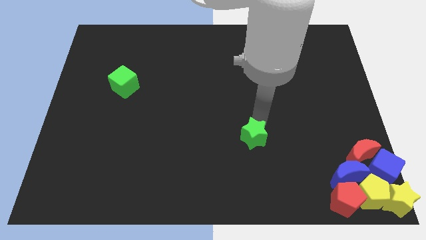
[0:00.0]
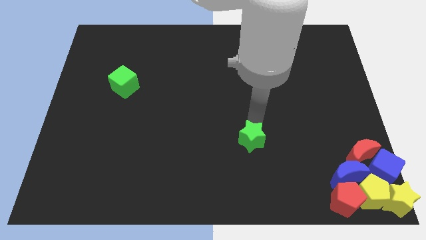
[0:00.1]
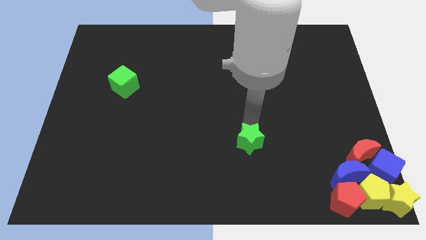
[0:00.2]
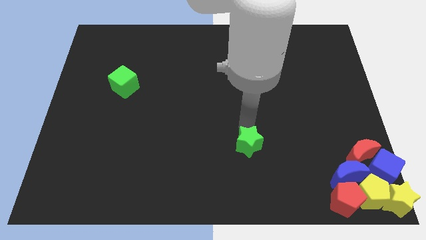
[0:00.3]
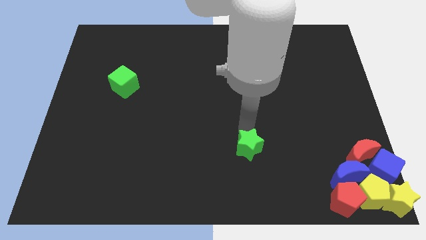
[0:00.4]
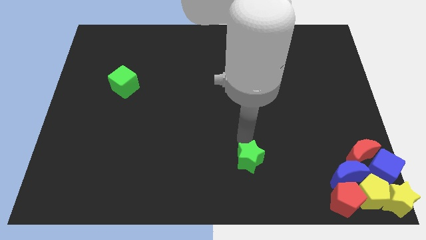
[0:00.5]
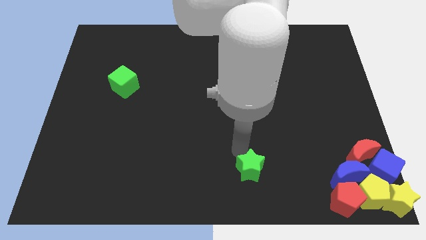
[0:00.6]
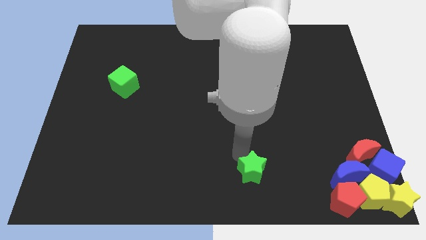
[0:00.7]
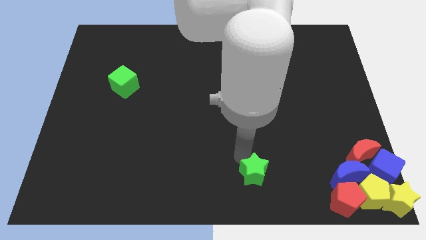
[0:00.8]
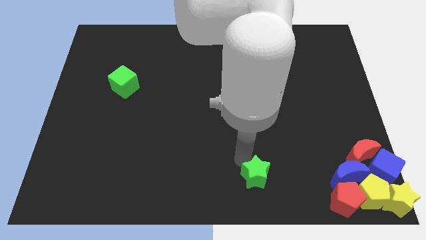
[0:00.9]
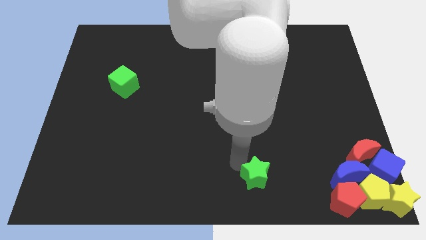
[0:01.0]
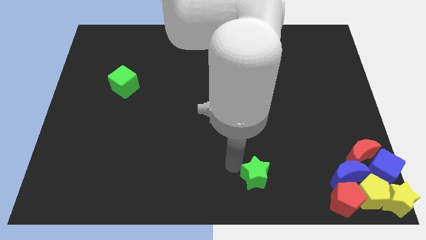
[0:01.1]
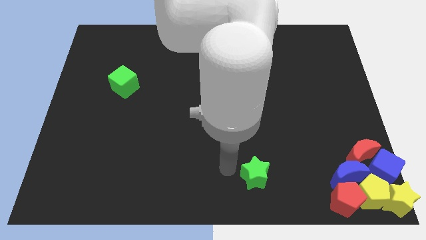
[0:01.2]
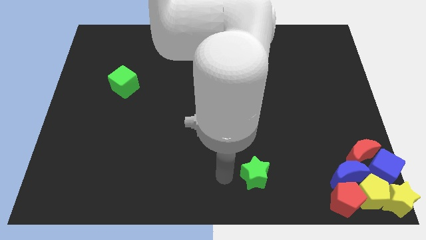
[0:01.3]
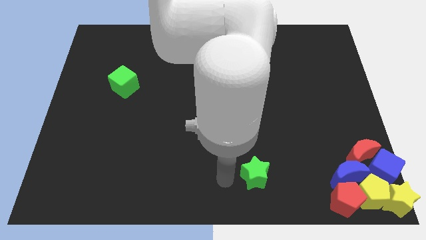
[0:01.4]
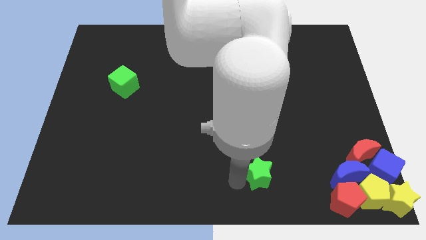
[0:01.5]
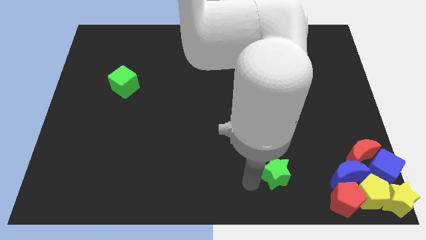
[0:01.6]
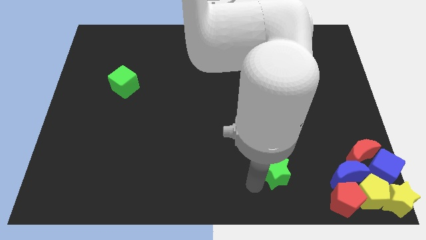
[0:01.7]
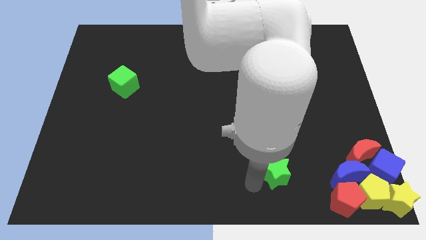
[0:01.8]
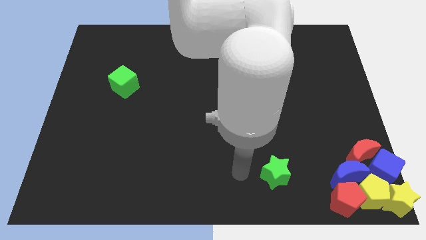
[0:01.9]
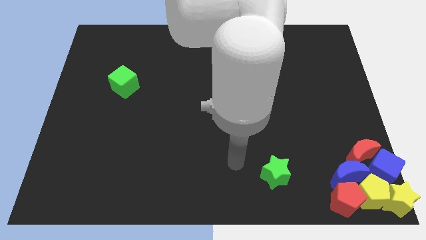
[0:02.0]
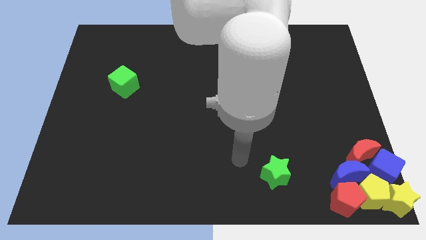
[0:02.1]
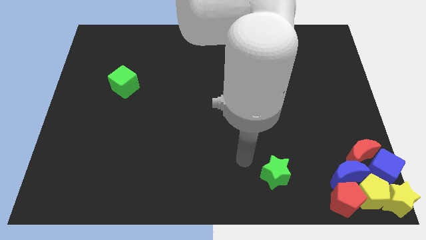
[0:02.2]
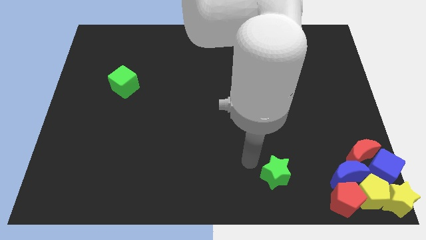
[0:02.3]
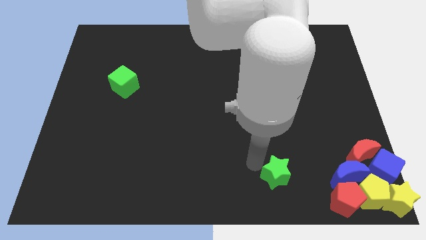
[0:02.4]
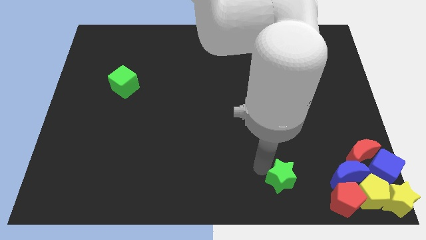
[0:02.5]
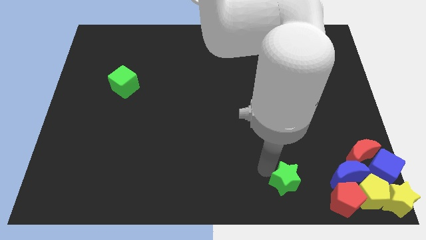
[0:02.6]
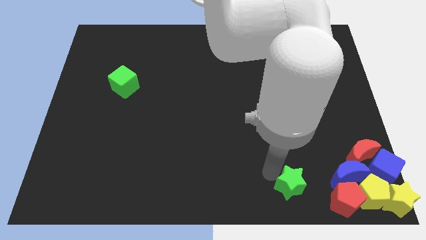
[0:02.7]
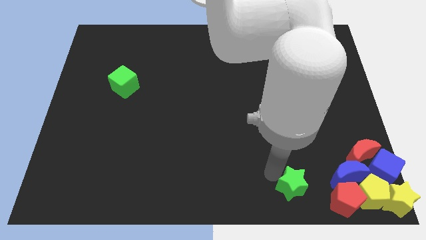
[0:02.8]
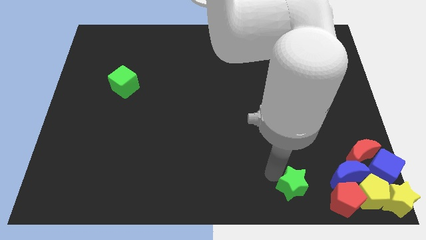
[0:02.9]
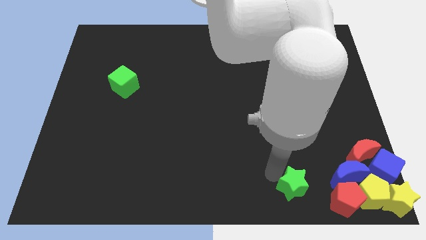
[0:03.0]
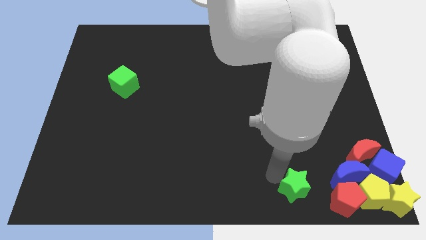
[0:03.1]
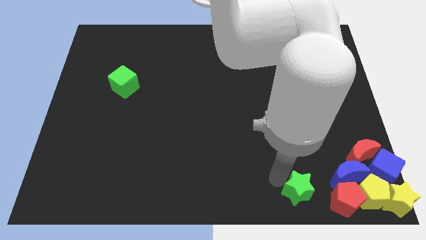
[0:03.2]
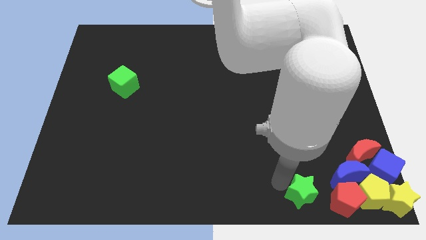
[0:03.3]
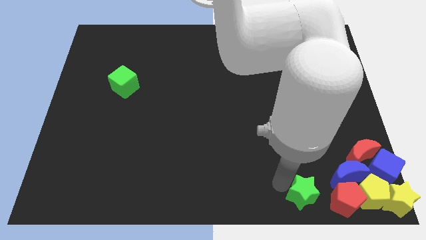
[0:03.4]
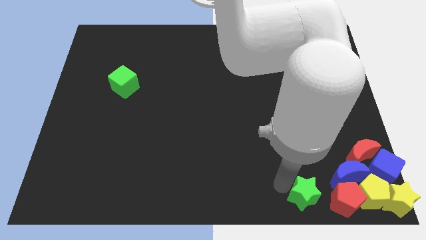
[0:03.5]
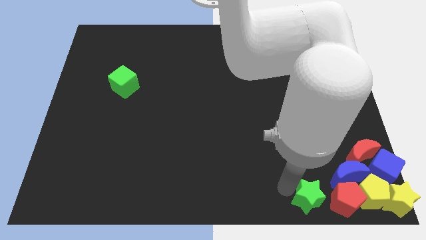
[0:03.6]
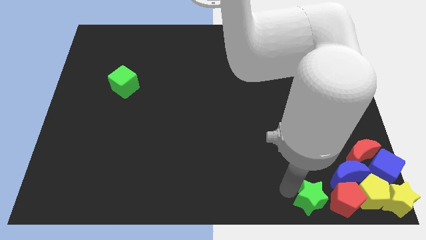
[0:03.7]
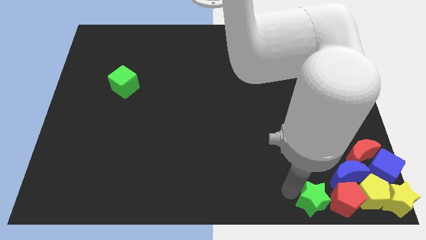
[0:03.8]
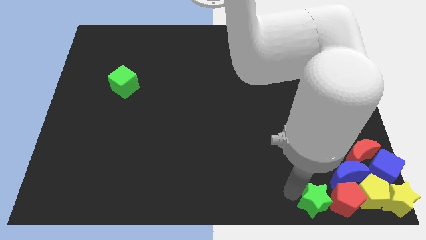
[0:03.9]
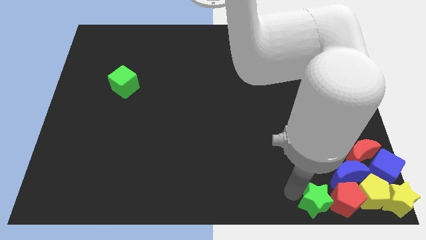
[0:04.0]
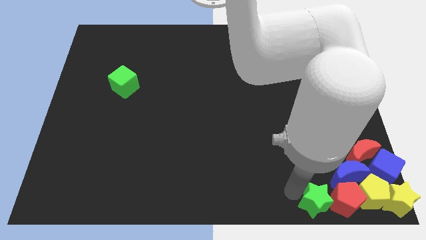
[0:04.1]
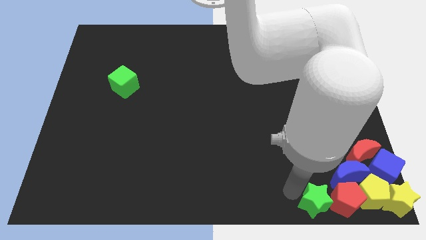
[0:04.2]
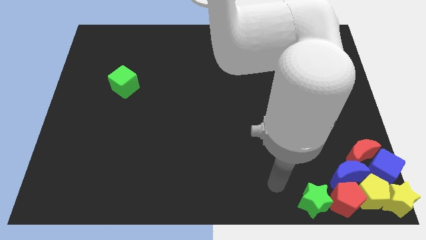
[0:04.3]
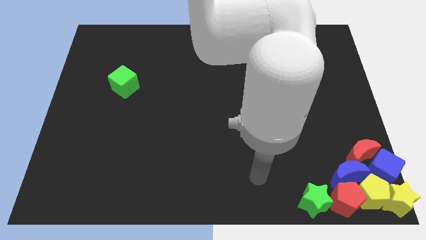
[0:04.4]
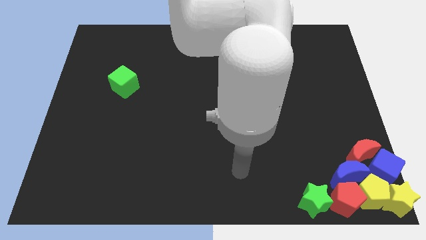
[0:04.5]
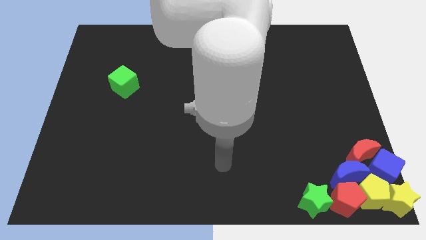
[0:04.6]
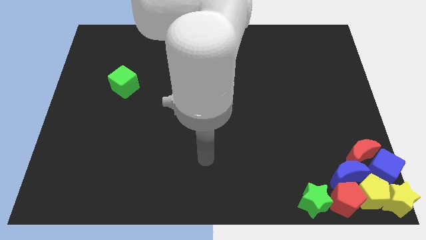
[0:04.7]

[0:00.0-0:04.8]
place the green star left to the red pentagon

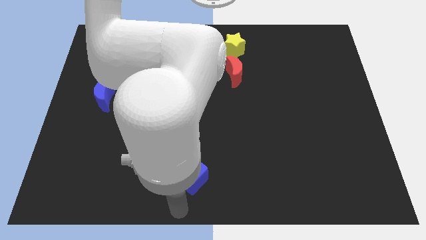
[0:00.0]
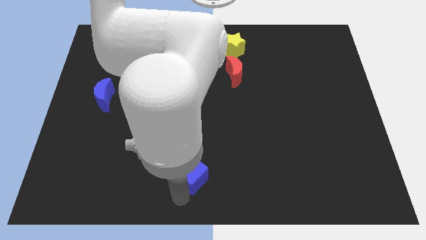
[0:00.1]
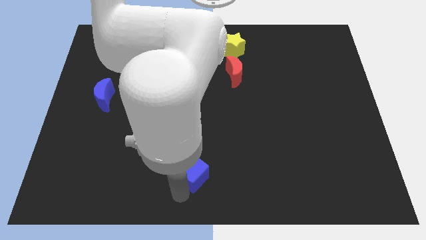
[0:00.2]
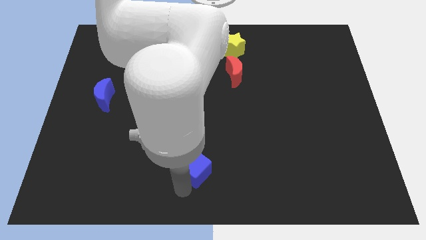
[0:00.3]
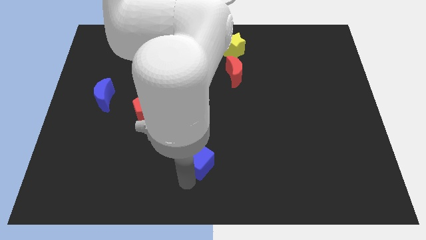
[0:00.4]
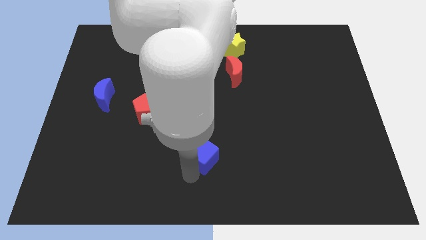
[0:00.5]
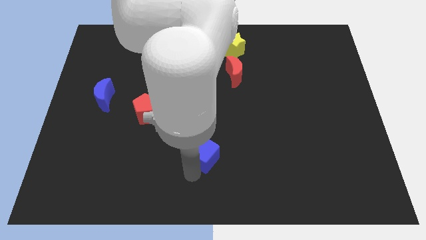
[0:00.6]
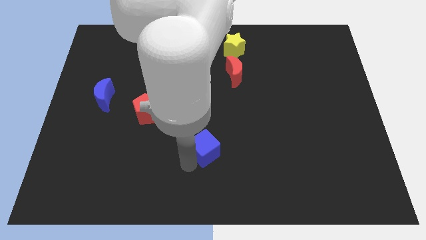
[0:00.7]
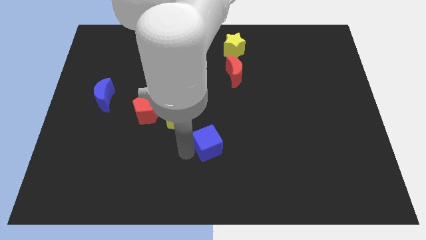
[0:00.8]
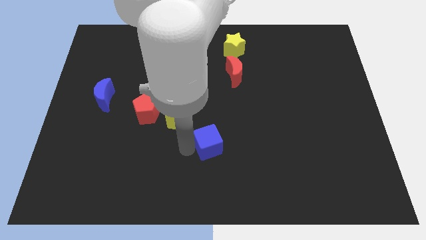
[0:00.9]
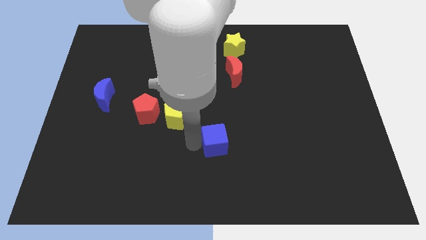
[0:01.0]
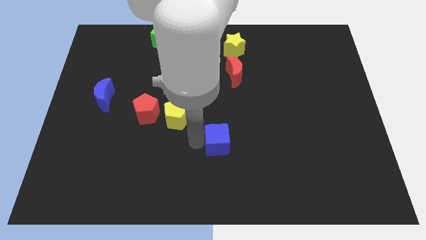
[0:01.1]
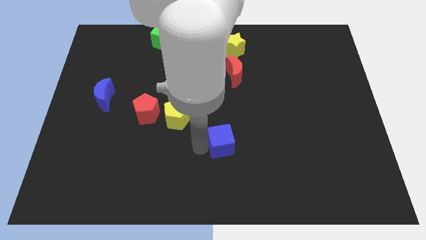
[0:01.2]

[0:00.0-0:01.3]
place the blue cube diagonally at the bottom right side of the yellow pentagon

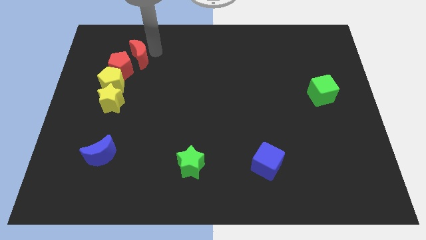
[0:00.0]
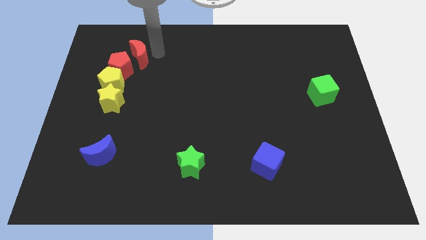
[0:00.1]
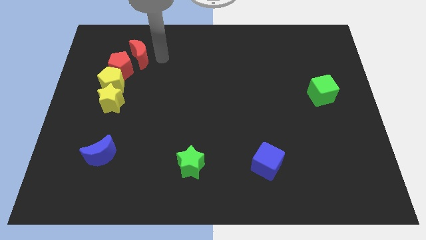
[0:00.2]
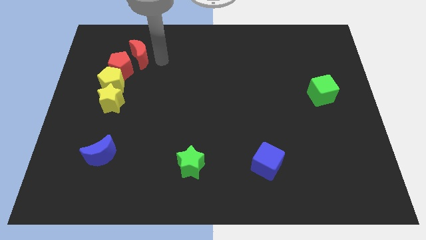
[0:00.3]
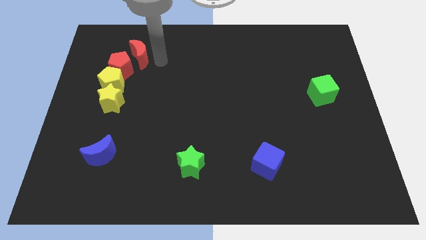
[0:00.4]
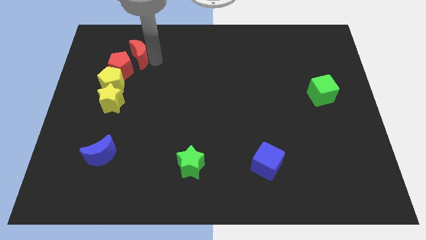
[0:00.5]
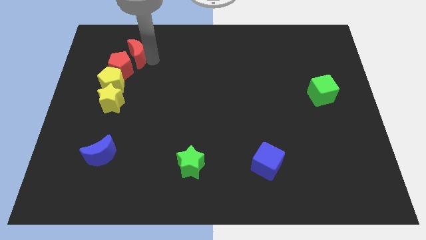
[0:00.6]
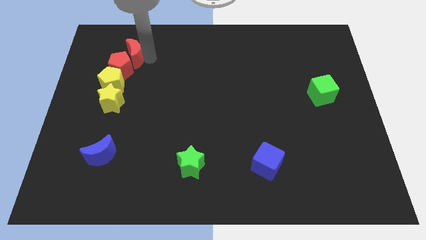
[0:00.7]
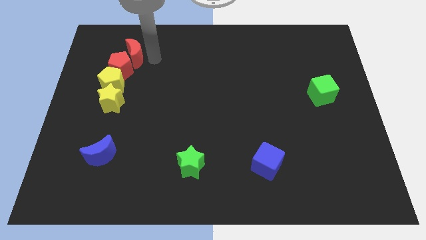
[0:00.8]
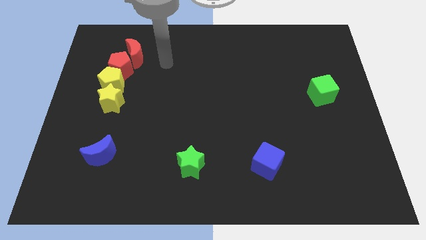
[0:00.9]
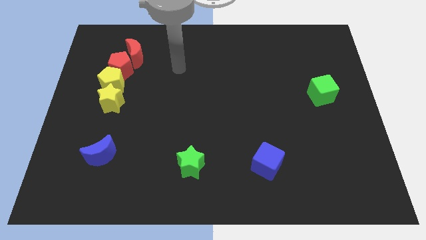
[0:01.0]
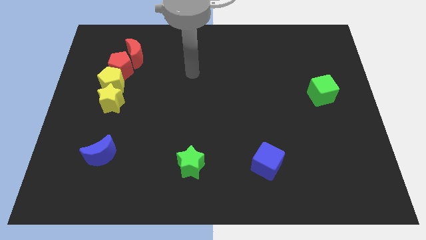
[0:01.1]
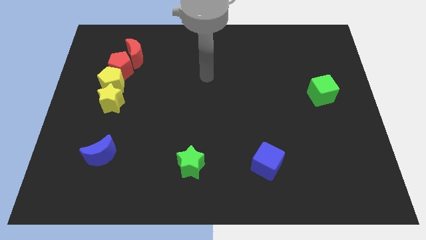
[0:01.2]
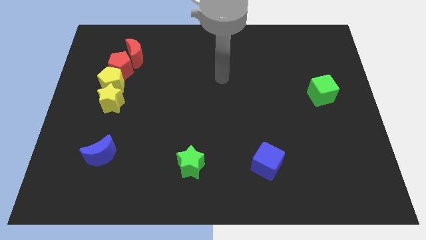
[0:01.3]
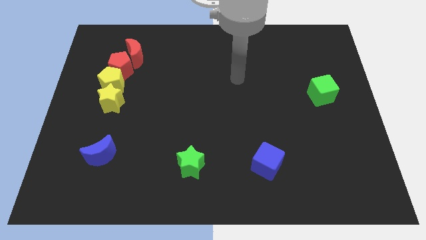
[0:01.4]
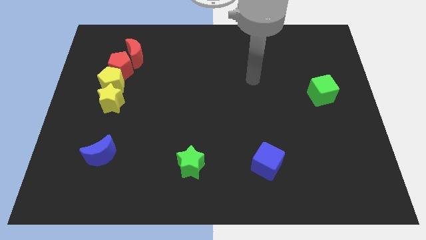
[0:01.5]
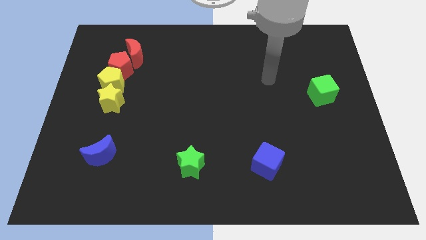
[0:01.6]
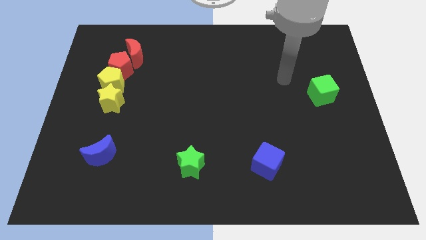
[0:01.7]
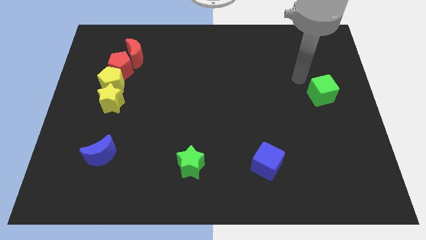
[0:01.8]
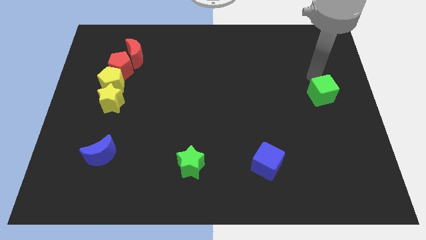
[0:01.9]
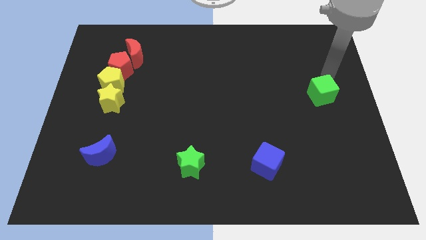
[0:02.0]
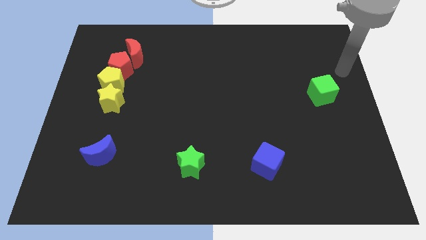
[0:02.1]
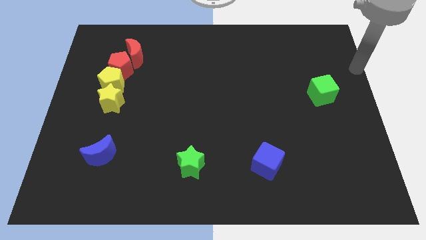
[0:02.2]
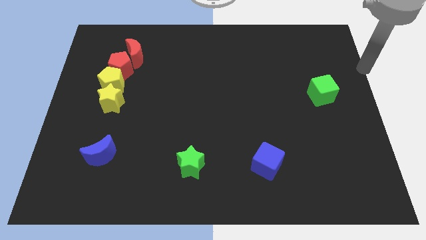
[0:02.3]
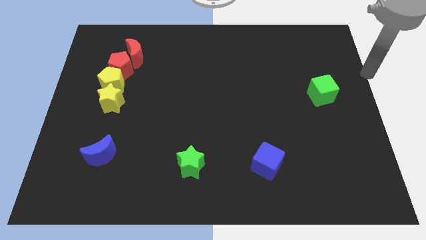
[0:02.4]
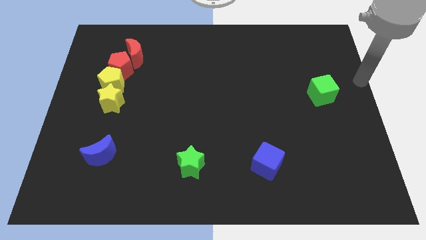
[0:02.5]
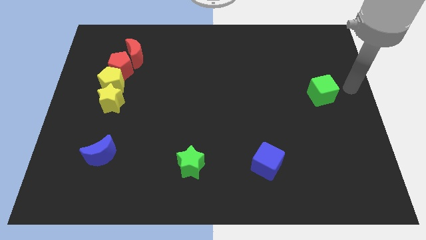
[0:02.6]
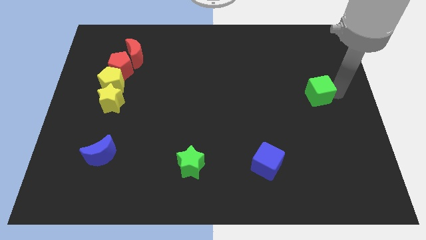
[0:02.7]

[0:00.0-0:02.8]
place your arm right to the green cube
